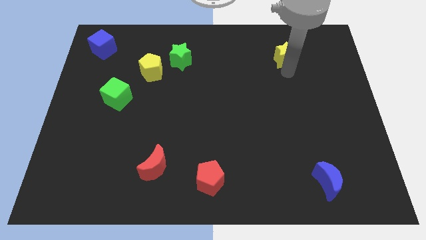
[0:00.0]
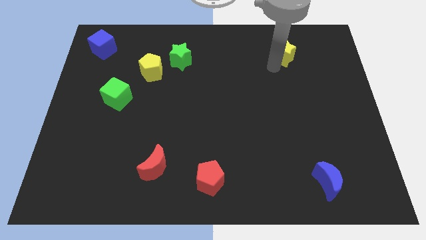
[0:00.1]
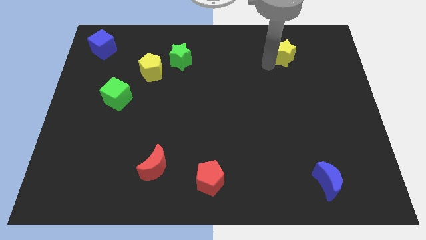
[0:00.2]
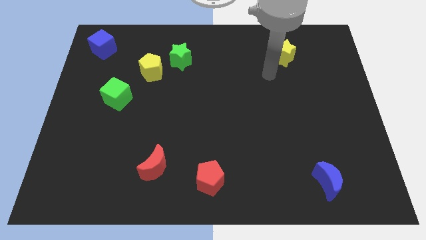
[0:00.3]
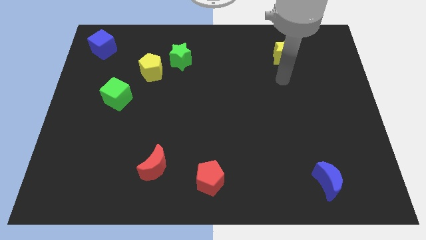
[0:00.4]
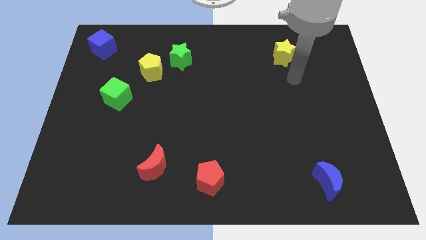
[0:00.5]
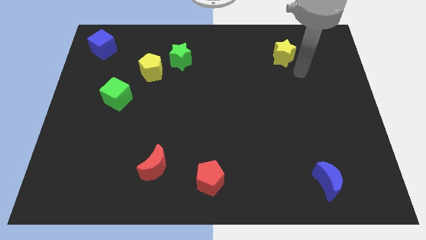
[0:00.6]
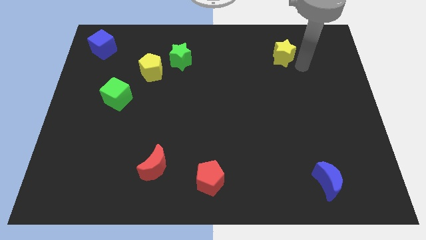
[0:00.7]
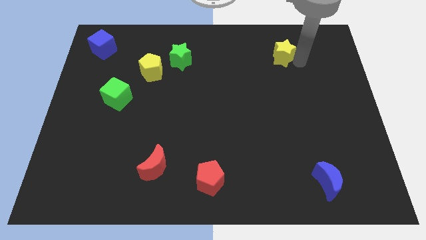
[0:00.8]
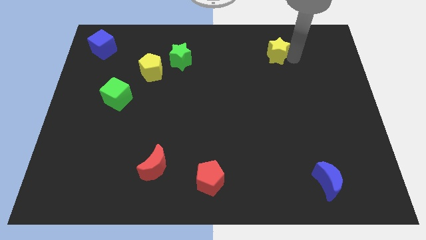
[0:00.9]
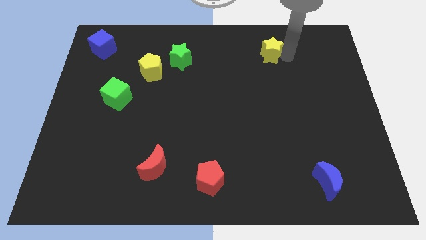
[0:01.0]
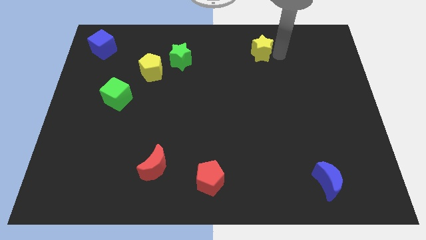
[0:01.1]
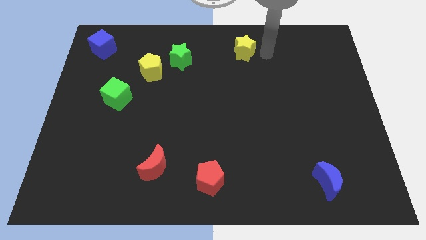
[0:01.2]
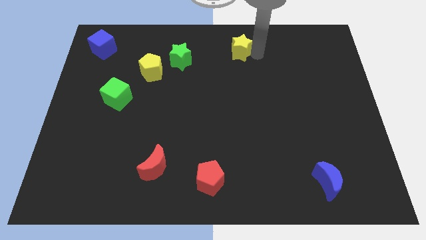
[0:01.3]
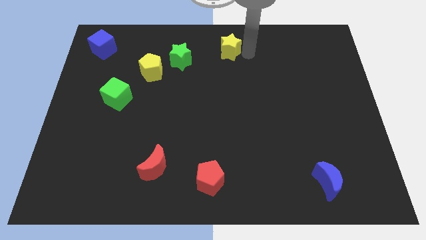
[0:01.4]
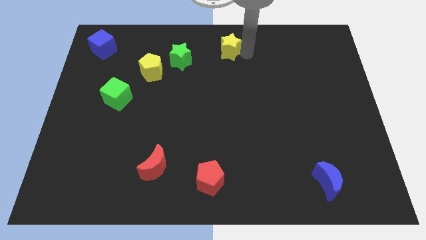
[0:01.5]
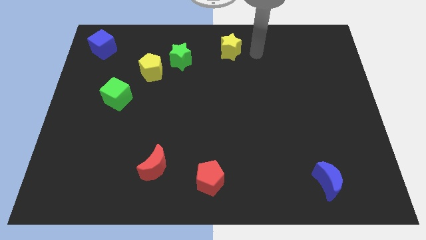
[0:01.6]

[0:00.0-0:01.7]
place the yellow star right to the green star

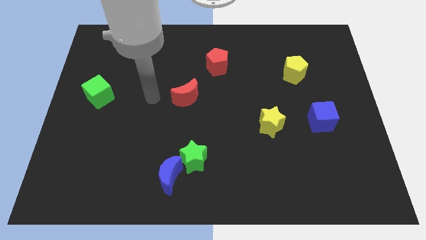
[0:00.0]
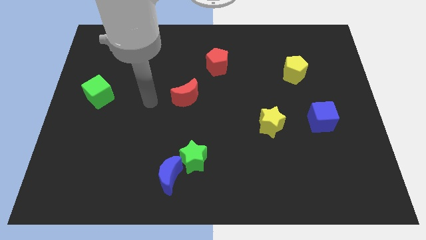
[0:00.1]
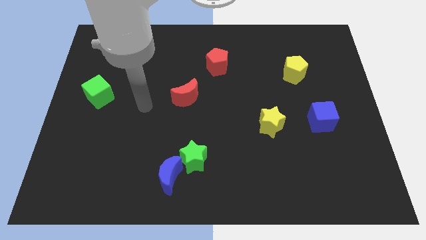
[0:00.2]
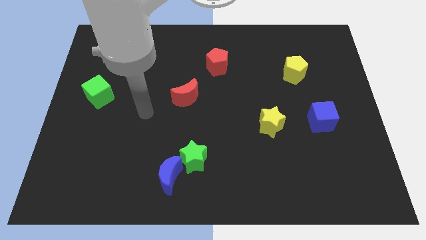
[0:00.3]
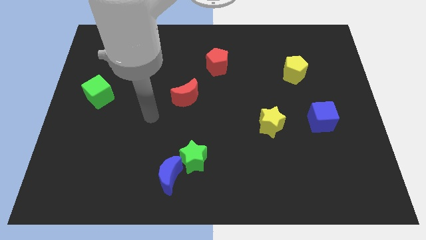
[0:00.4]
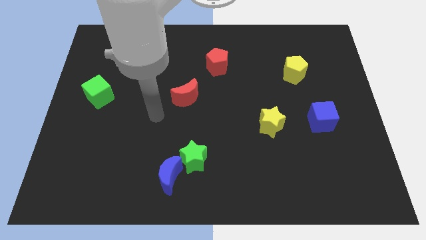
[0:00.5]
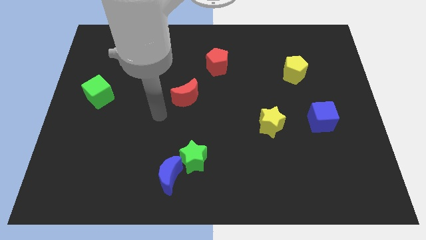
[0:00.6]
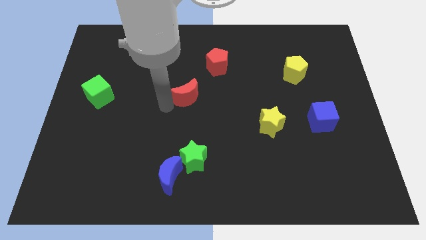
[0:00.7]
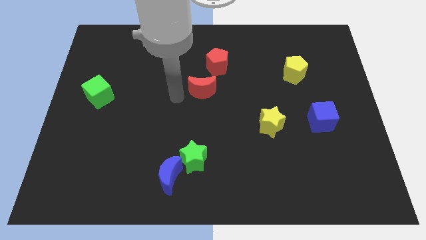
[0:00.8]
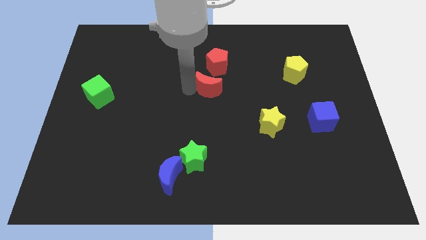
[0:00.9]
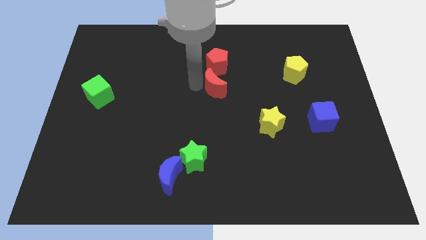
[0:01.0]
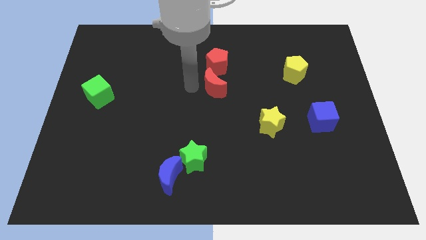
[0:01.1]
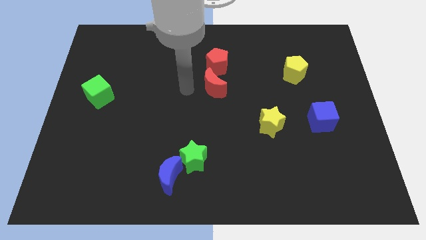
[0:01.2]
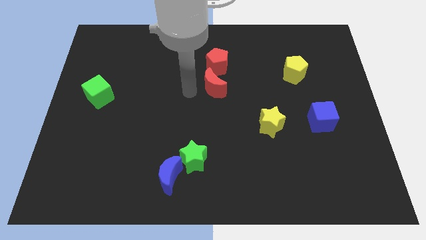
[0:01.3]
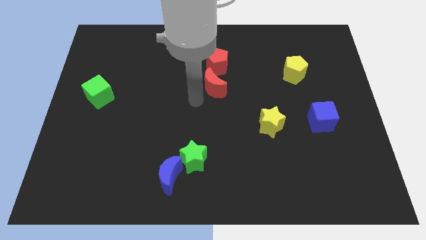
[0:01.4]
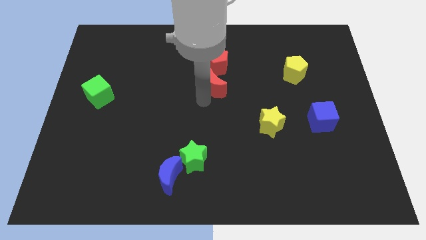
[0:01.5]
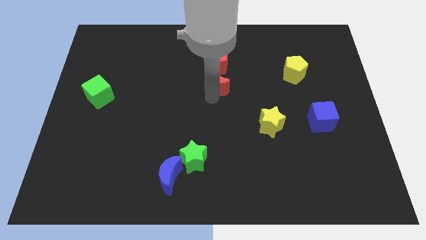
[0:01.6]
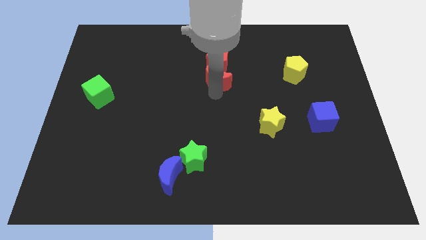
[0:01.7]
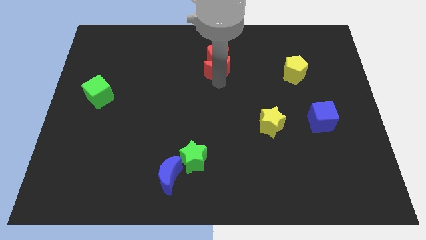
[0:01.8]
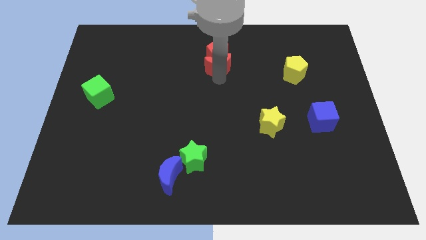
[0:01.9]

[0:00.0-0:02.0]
move the red crescent into the red pentagon

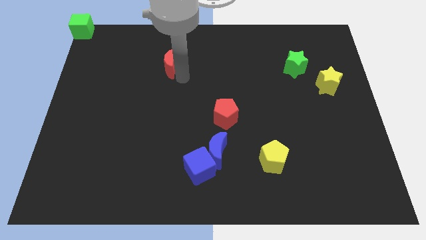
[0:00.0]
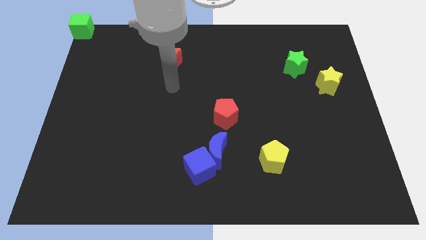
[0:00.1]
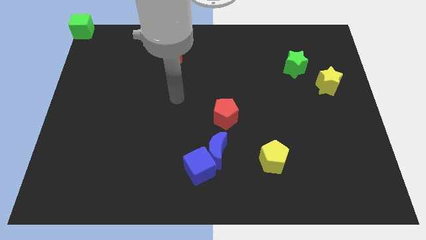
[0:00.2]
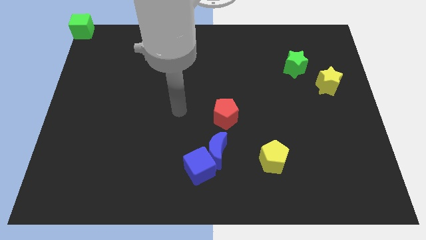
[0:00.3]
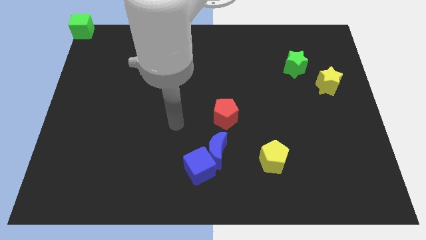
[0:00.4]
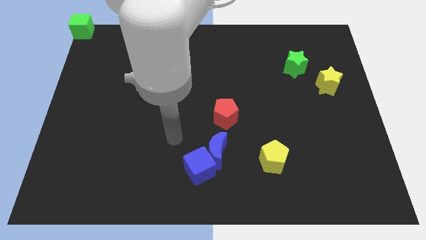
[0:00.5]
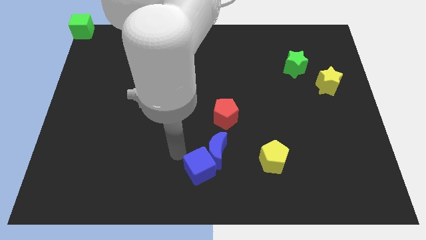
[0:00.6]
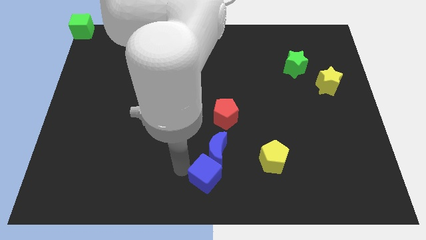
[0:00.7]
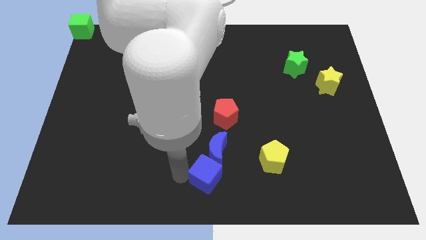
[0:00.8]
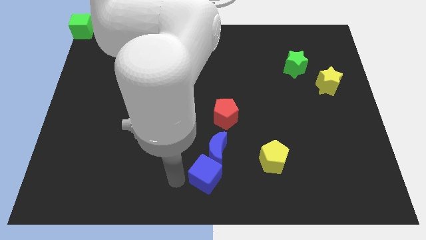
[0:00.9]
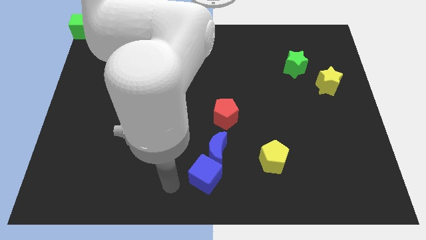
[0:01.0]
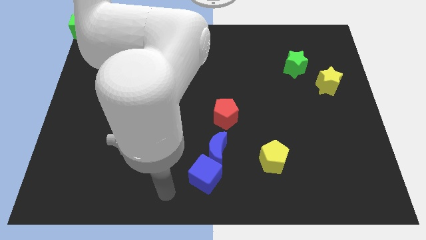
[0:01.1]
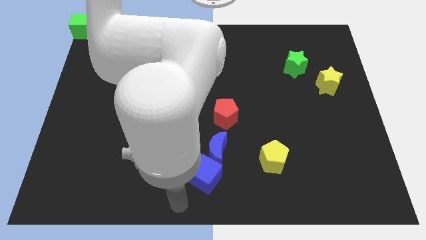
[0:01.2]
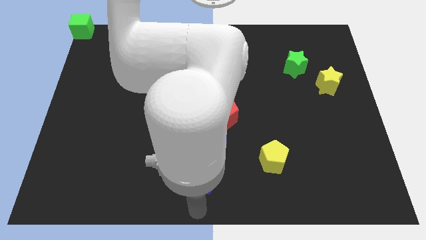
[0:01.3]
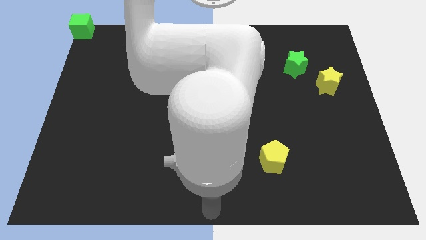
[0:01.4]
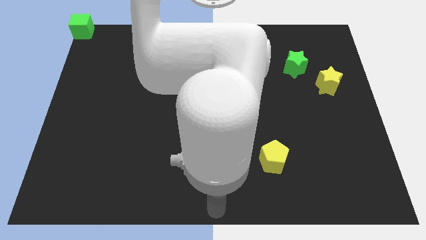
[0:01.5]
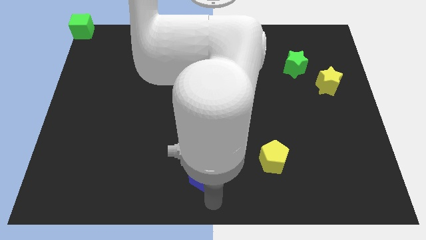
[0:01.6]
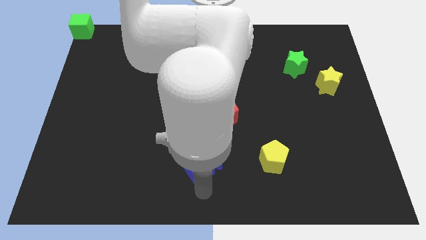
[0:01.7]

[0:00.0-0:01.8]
push the blue cube slightly to the bottom

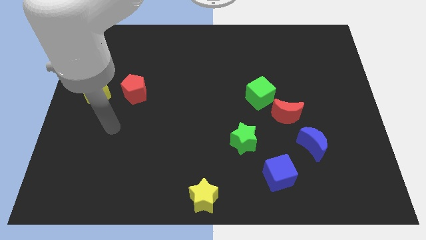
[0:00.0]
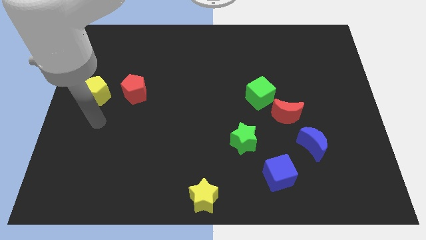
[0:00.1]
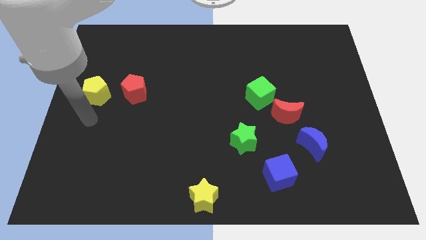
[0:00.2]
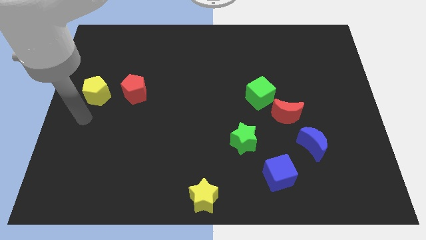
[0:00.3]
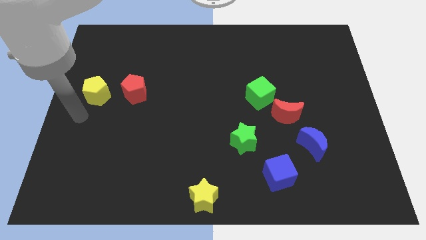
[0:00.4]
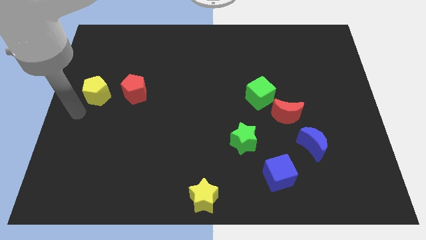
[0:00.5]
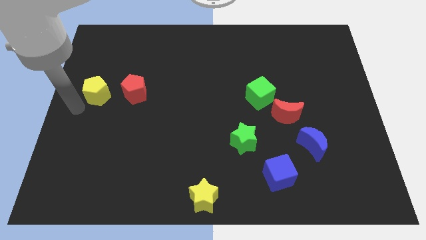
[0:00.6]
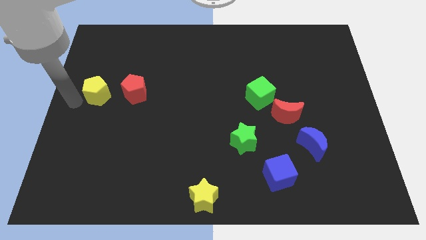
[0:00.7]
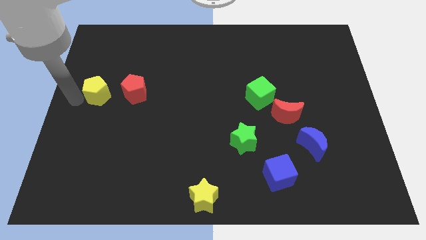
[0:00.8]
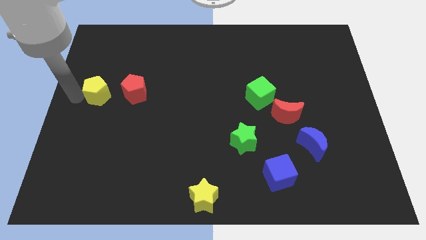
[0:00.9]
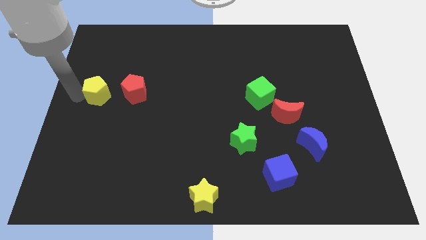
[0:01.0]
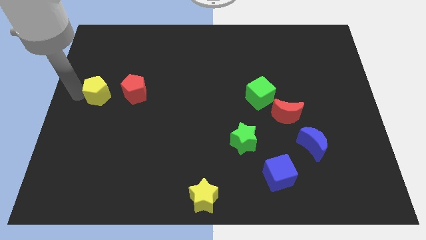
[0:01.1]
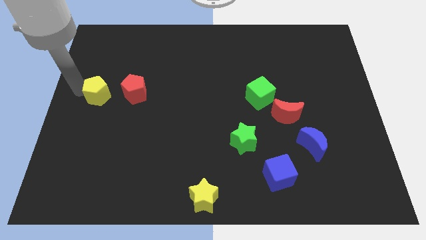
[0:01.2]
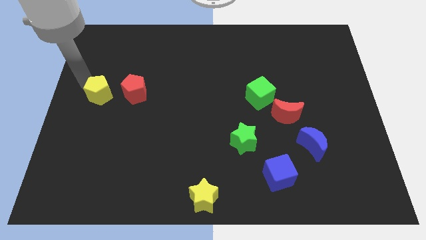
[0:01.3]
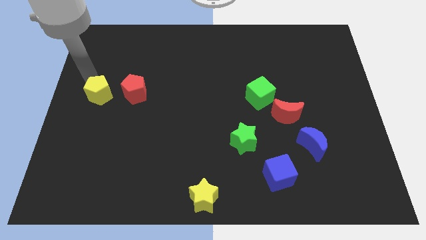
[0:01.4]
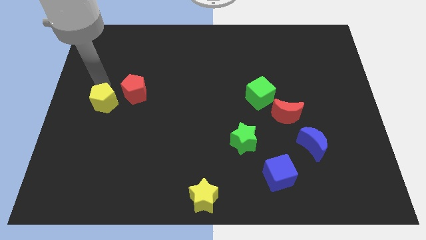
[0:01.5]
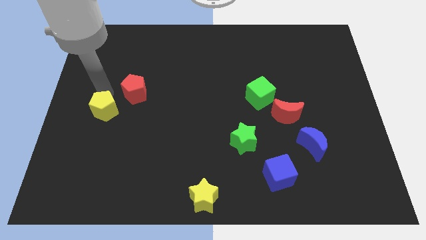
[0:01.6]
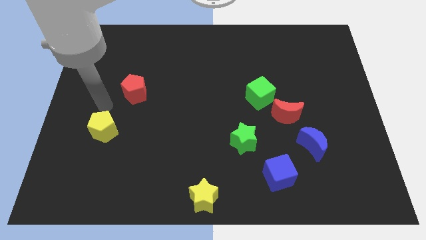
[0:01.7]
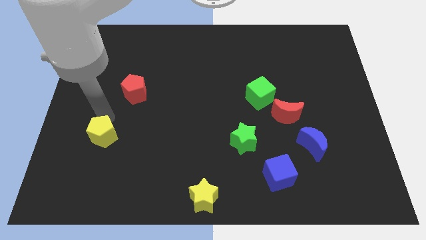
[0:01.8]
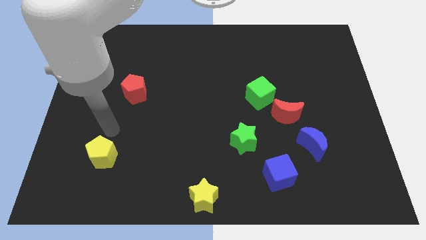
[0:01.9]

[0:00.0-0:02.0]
push the yellow pentagon towards the bottom side

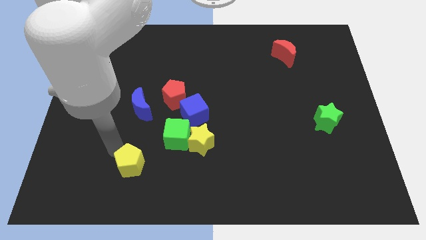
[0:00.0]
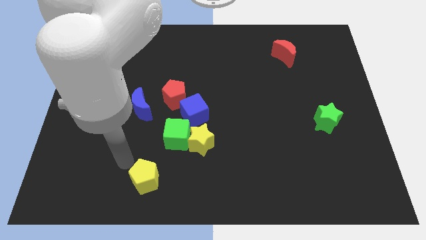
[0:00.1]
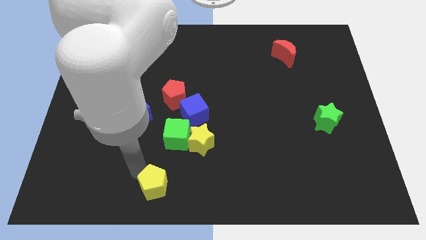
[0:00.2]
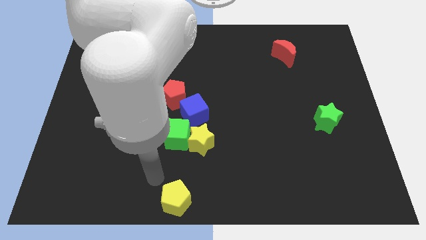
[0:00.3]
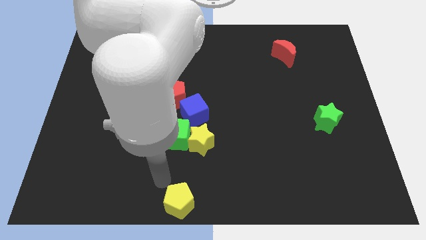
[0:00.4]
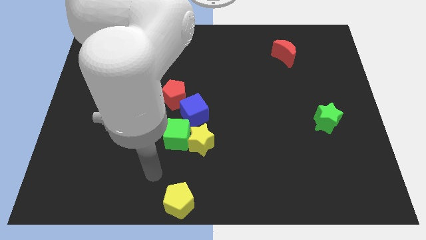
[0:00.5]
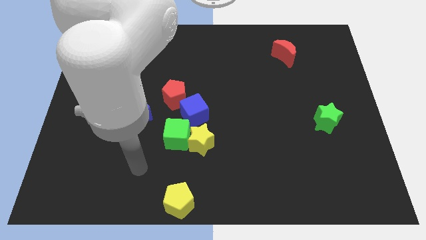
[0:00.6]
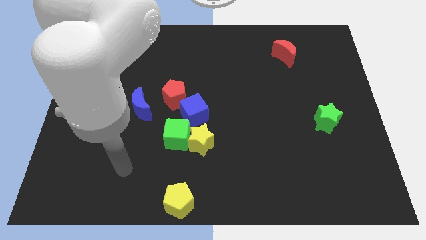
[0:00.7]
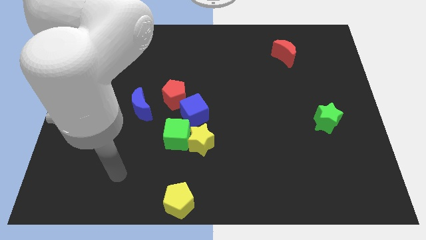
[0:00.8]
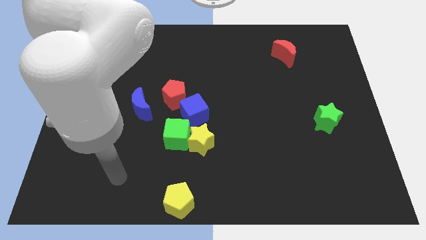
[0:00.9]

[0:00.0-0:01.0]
push the yellow pentagon downward

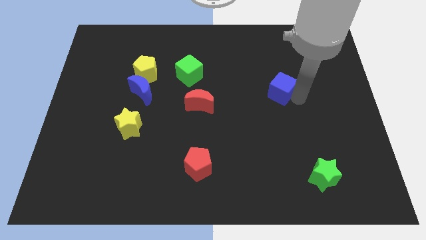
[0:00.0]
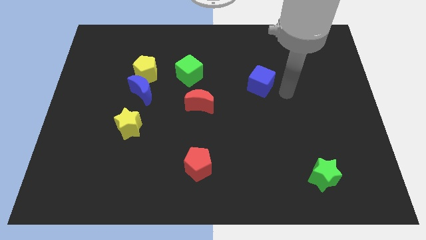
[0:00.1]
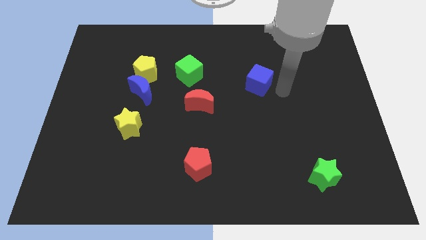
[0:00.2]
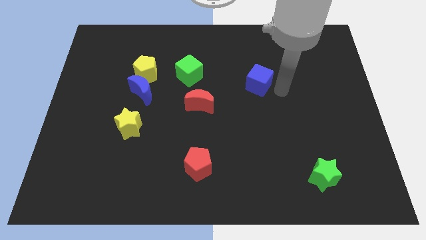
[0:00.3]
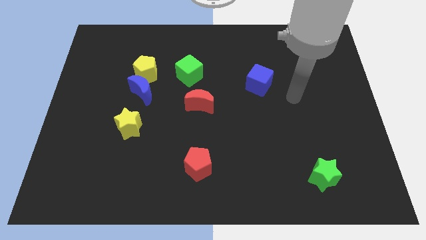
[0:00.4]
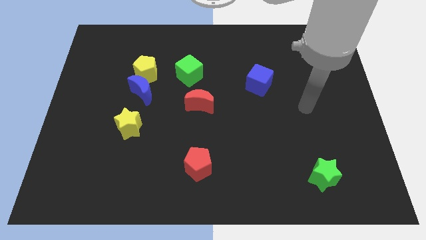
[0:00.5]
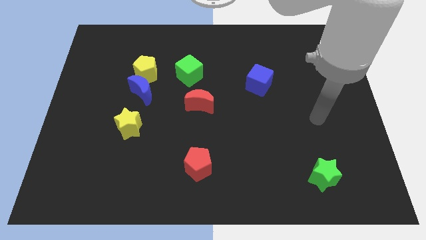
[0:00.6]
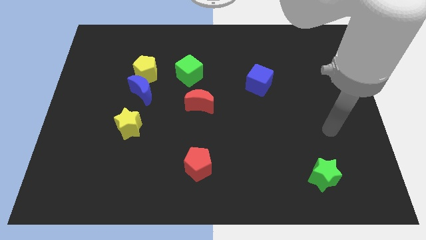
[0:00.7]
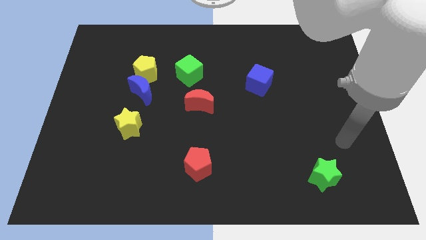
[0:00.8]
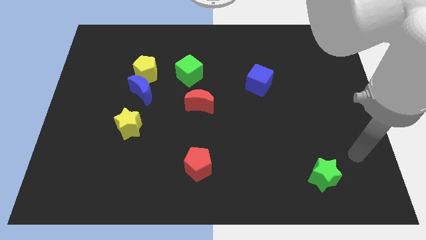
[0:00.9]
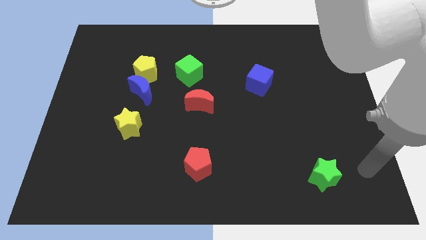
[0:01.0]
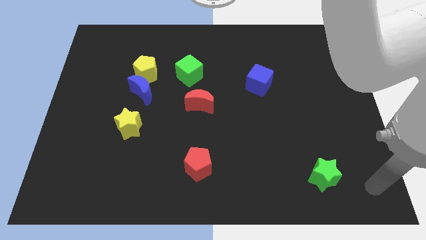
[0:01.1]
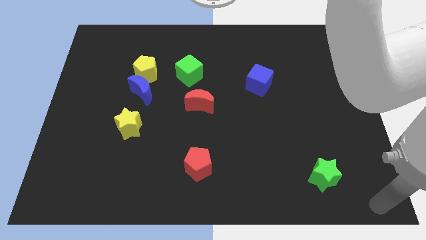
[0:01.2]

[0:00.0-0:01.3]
move the arm downwards
